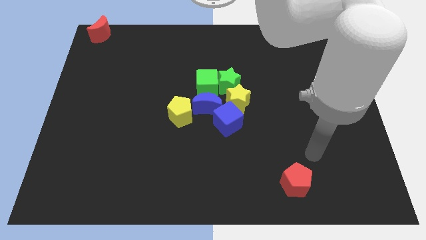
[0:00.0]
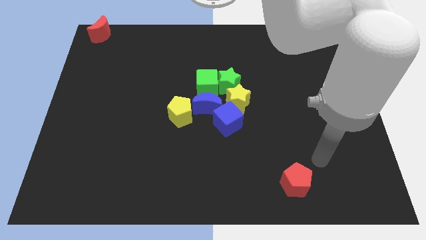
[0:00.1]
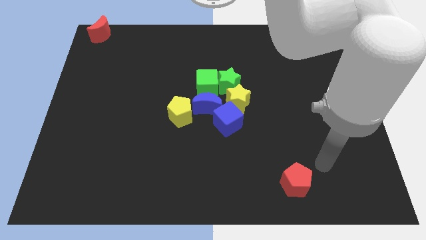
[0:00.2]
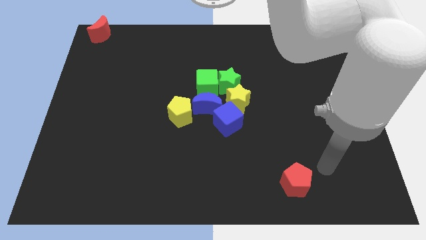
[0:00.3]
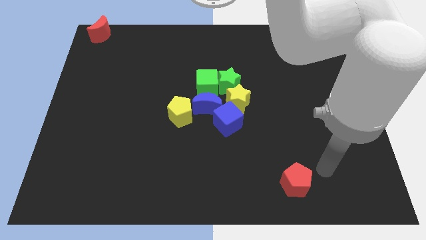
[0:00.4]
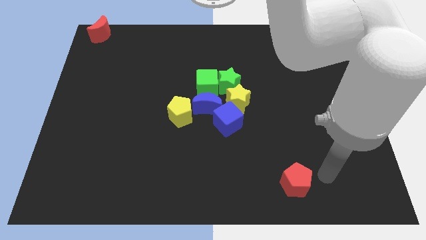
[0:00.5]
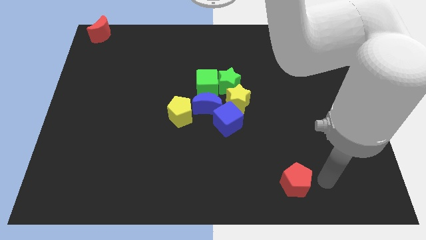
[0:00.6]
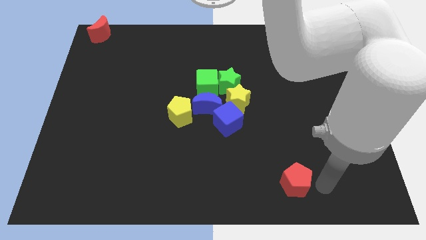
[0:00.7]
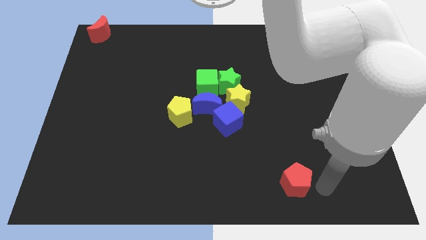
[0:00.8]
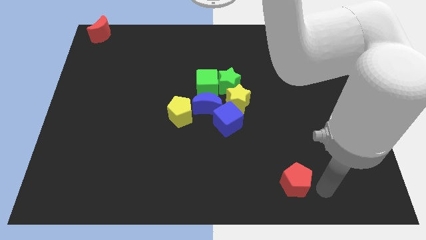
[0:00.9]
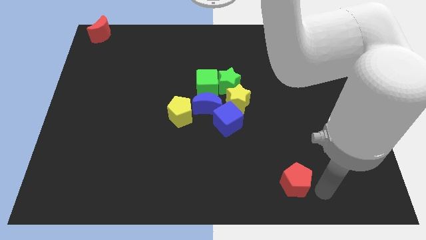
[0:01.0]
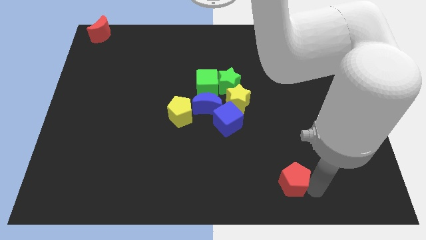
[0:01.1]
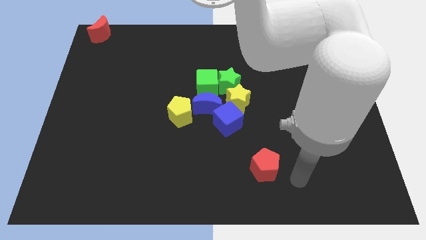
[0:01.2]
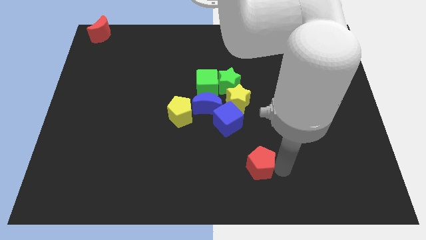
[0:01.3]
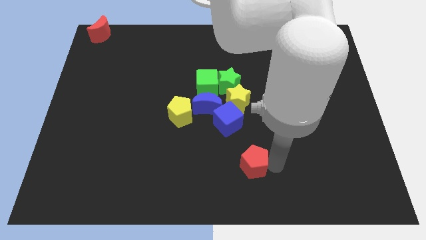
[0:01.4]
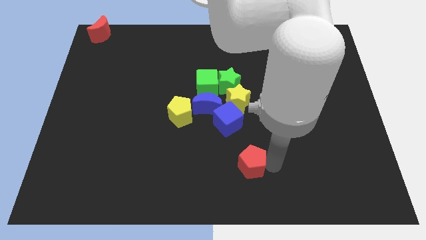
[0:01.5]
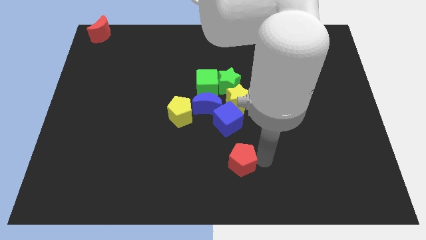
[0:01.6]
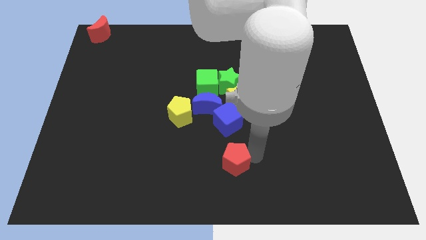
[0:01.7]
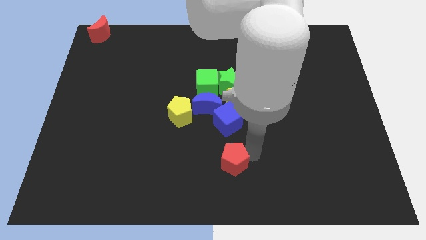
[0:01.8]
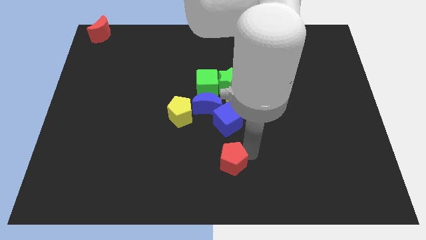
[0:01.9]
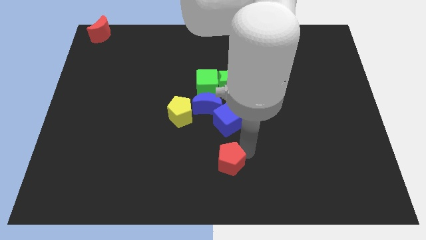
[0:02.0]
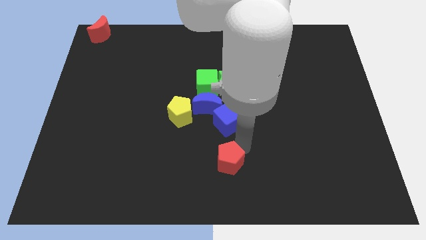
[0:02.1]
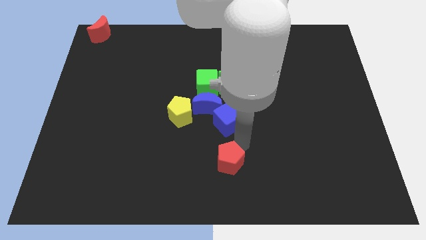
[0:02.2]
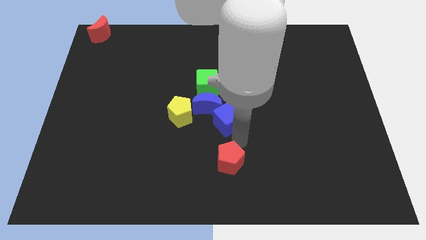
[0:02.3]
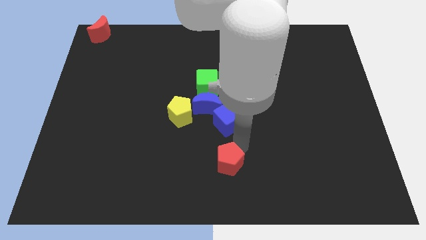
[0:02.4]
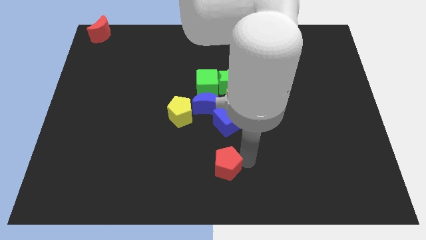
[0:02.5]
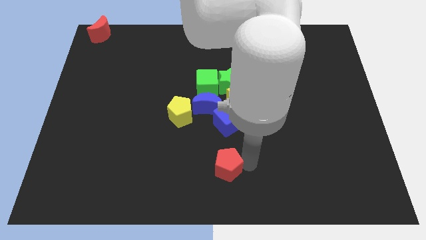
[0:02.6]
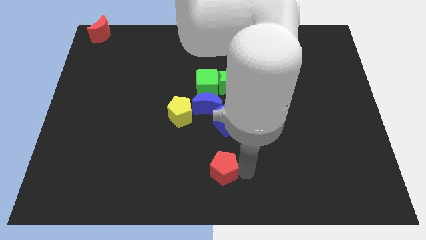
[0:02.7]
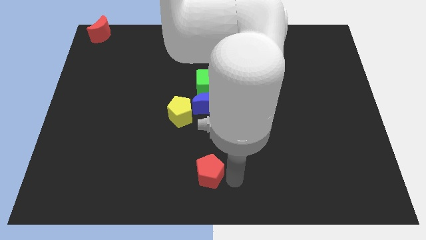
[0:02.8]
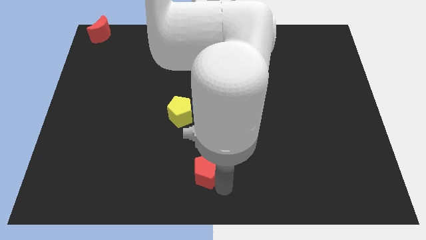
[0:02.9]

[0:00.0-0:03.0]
move the red pentagon below the blue cube

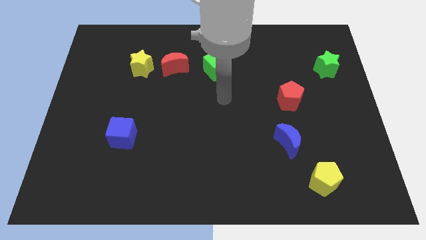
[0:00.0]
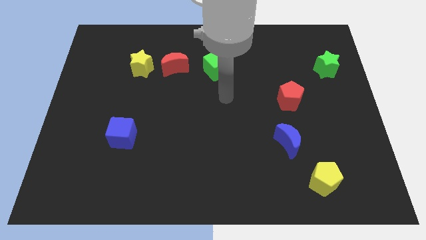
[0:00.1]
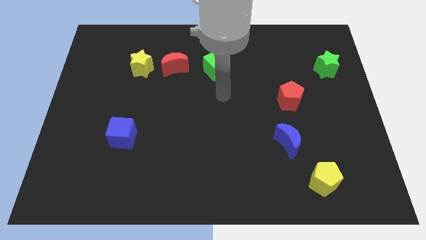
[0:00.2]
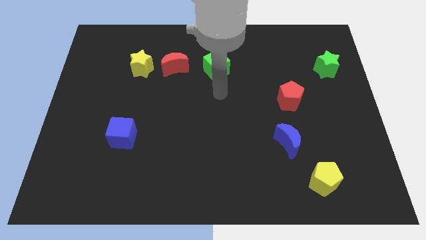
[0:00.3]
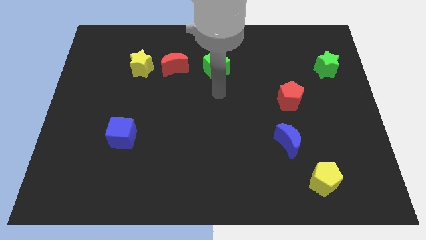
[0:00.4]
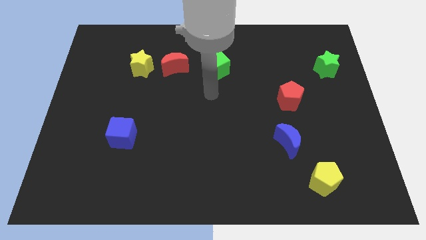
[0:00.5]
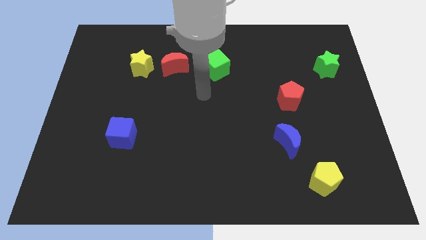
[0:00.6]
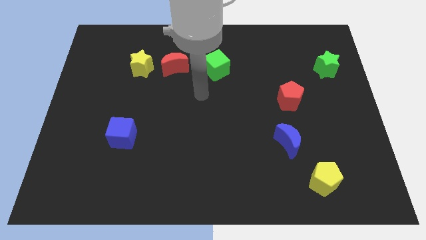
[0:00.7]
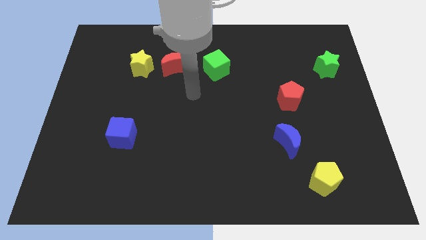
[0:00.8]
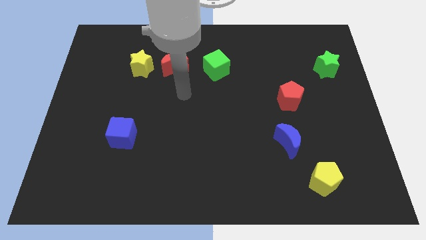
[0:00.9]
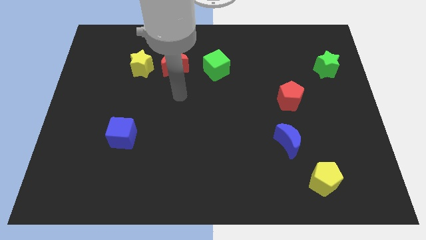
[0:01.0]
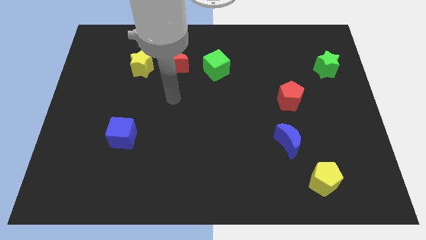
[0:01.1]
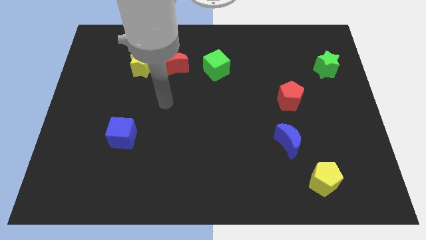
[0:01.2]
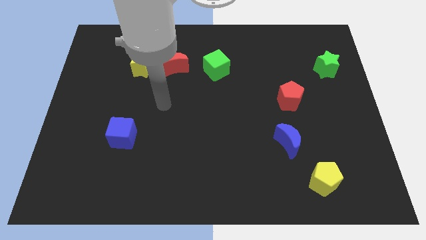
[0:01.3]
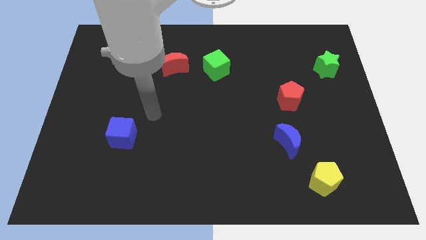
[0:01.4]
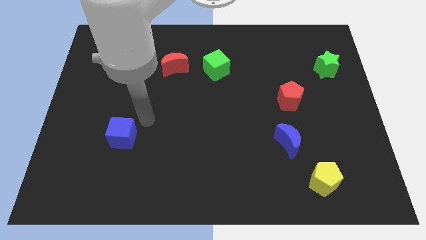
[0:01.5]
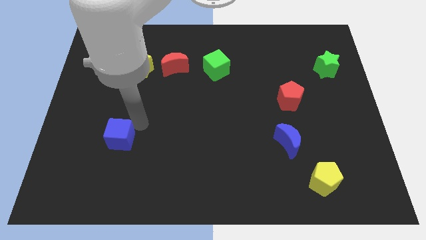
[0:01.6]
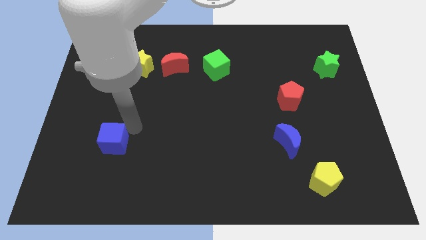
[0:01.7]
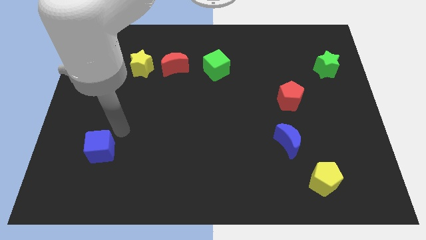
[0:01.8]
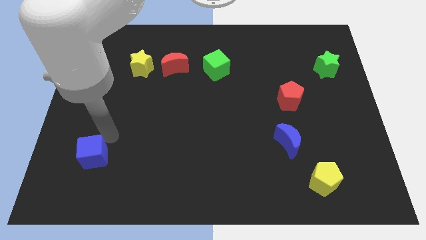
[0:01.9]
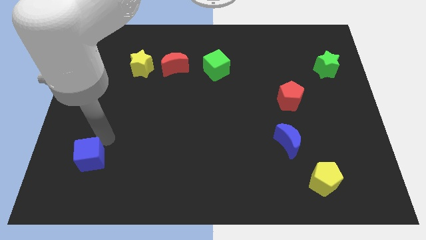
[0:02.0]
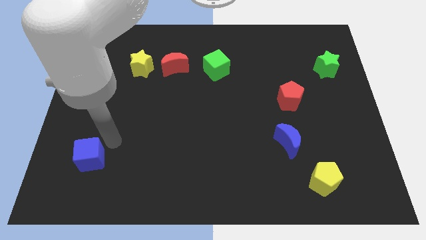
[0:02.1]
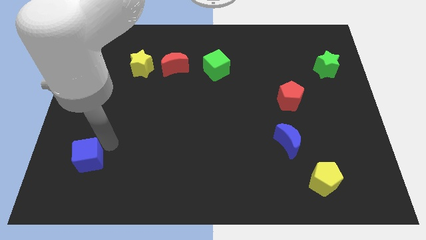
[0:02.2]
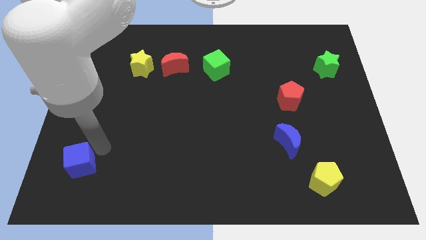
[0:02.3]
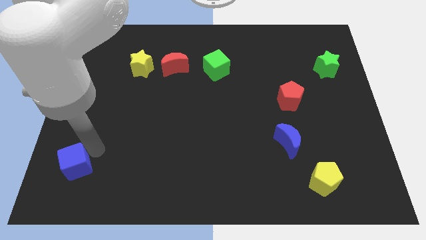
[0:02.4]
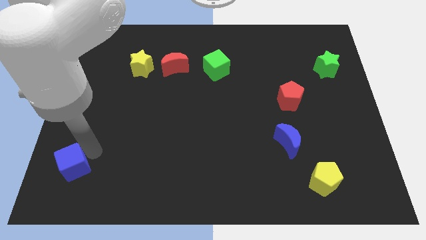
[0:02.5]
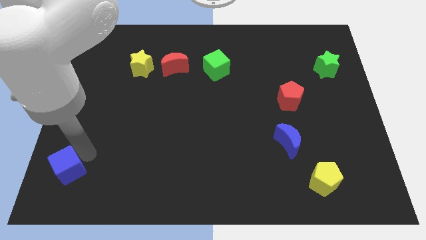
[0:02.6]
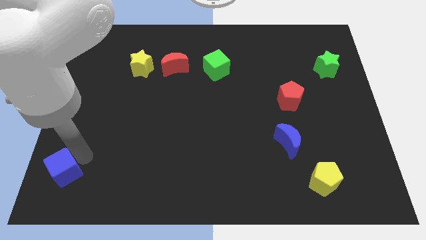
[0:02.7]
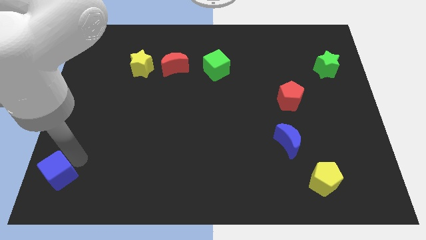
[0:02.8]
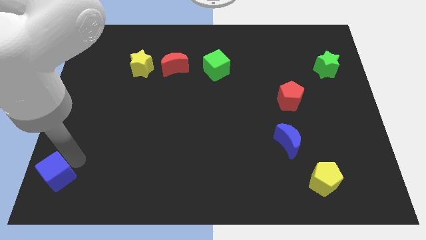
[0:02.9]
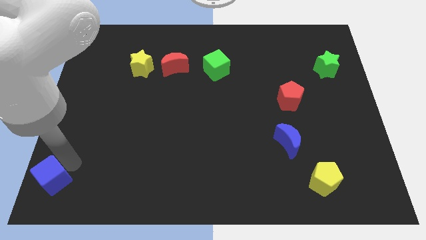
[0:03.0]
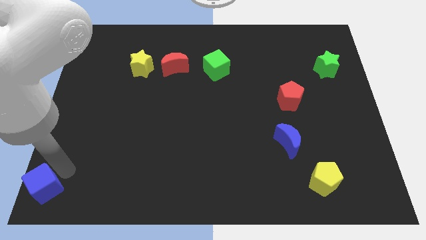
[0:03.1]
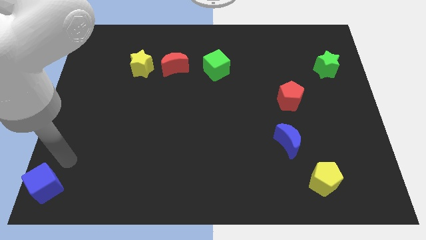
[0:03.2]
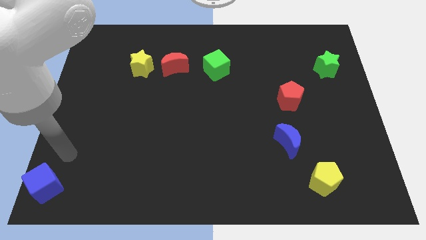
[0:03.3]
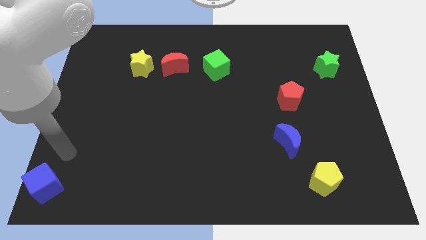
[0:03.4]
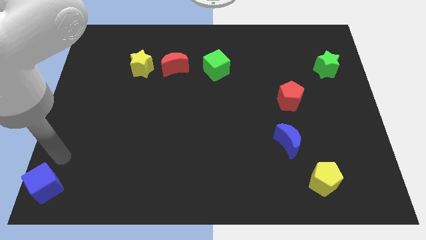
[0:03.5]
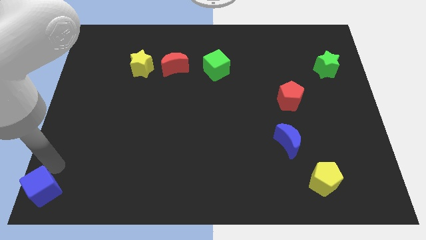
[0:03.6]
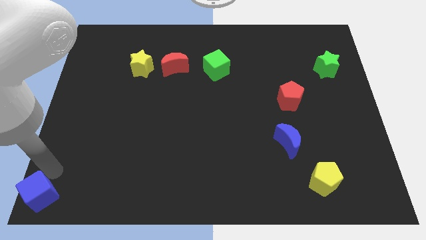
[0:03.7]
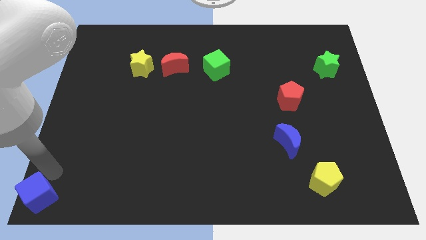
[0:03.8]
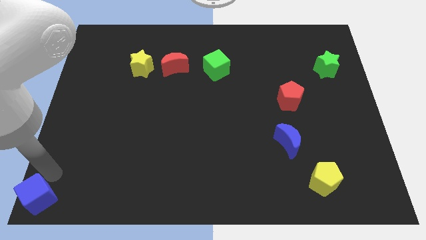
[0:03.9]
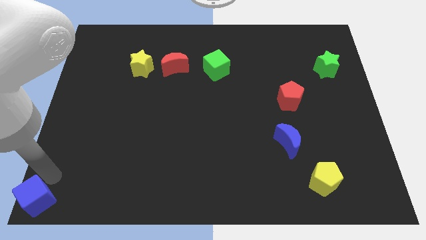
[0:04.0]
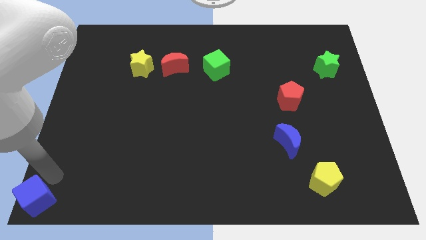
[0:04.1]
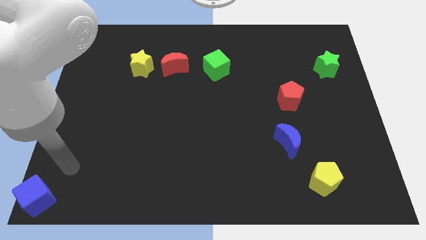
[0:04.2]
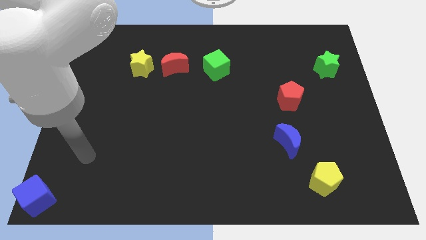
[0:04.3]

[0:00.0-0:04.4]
push the blue cube to the bottom left corner of the board

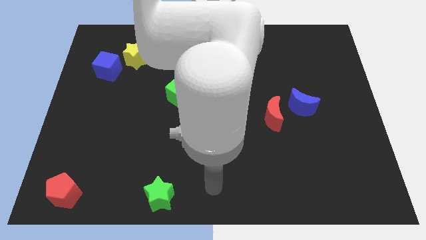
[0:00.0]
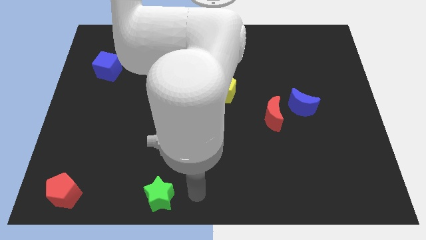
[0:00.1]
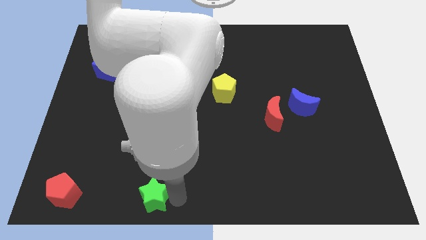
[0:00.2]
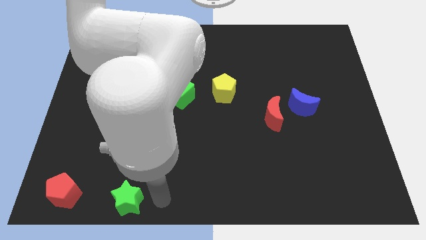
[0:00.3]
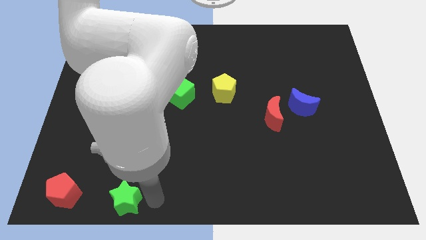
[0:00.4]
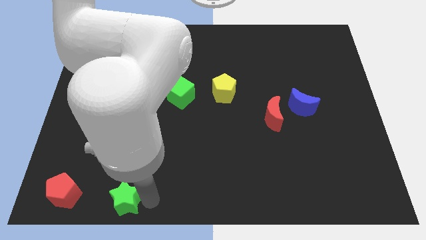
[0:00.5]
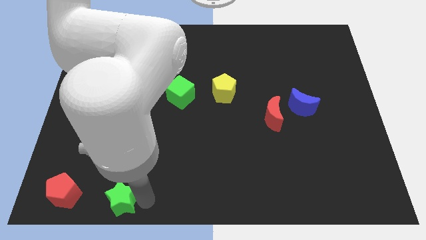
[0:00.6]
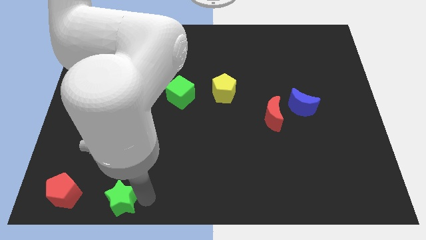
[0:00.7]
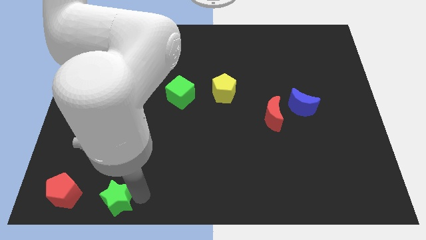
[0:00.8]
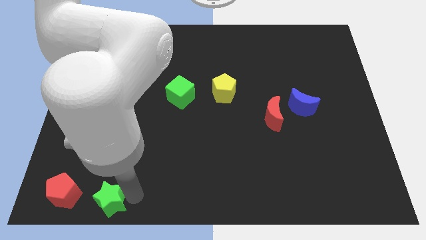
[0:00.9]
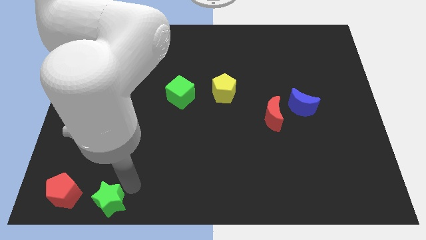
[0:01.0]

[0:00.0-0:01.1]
push the green star towards the right side of the red pentagon

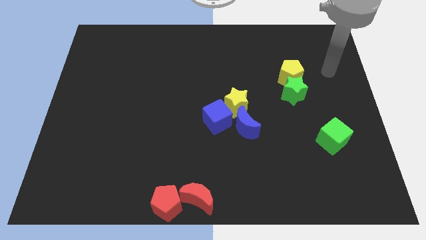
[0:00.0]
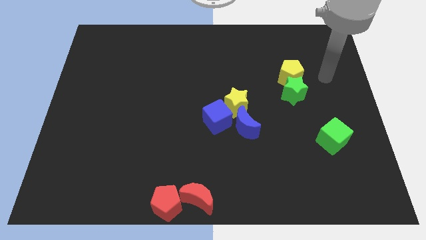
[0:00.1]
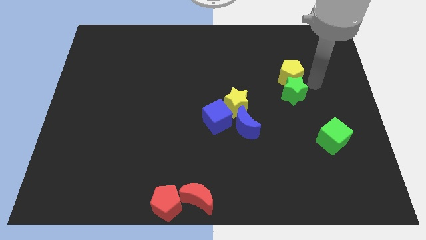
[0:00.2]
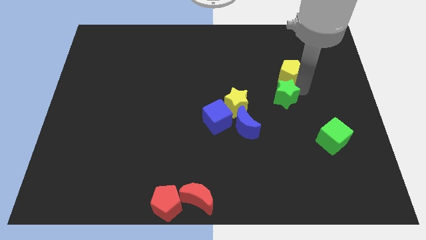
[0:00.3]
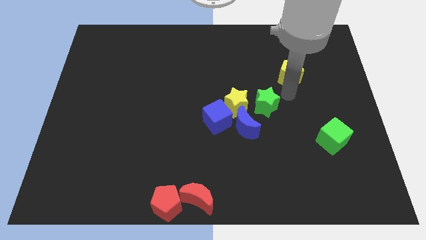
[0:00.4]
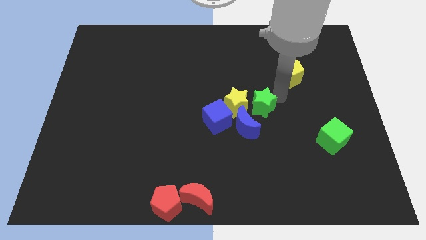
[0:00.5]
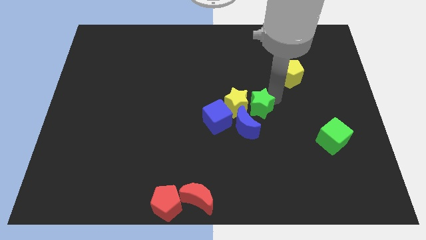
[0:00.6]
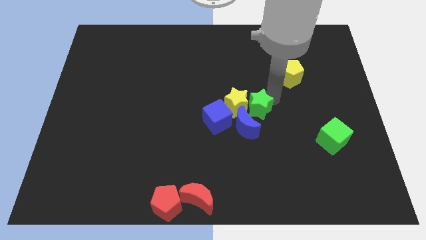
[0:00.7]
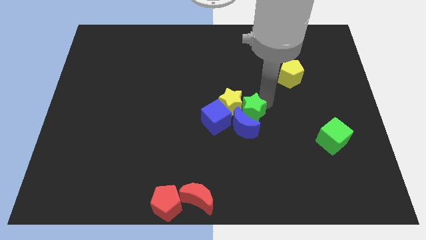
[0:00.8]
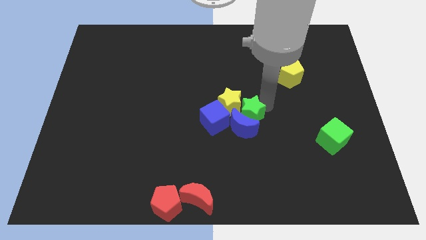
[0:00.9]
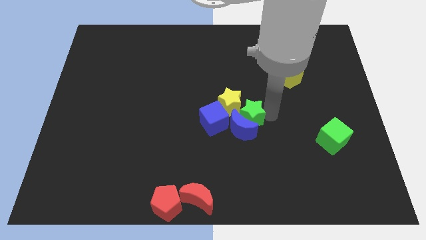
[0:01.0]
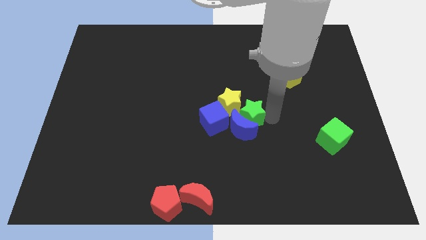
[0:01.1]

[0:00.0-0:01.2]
push the green star into the blue crescent
